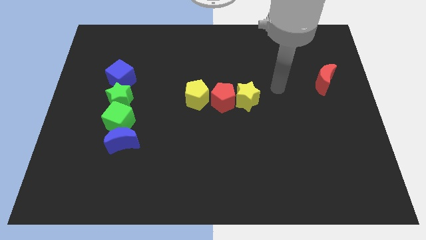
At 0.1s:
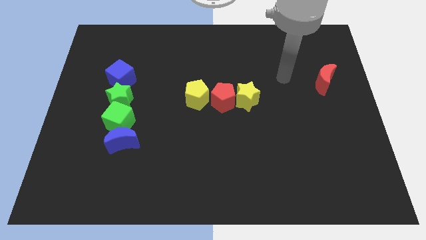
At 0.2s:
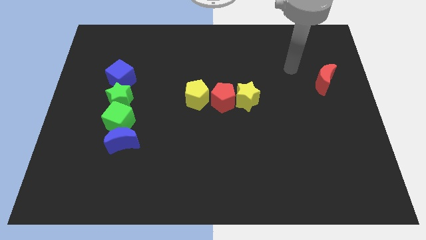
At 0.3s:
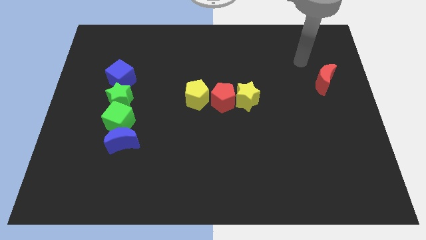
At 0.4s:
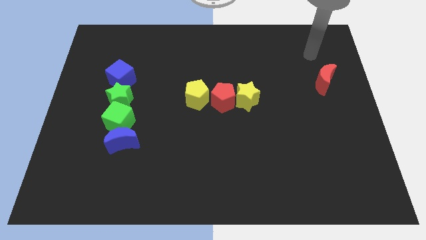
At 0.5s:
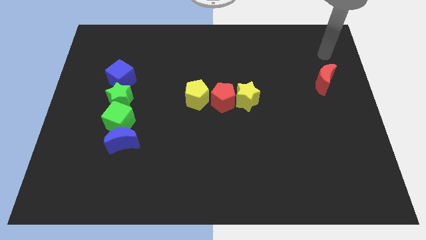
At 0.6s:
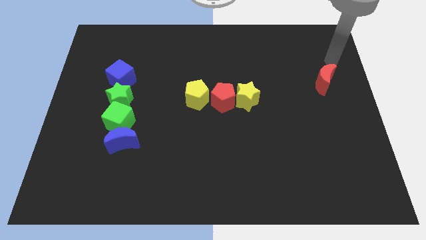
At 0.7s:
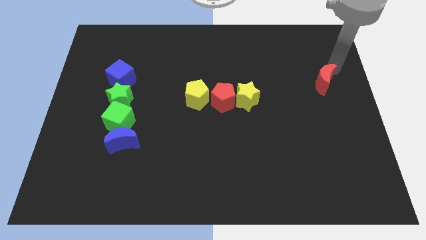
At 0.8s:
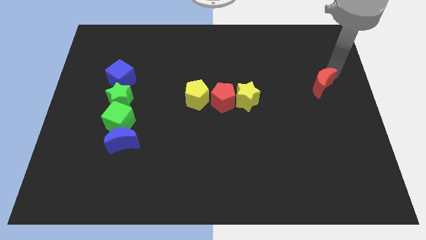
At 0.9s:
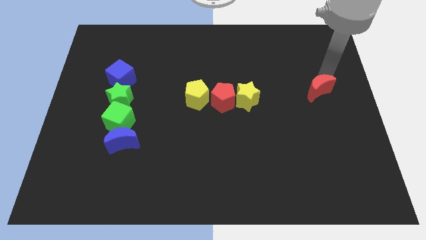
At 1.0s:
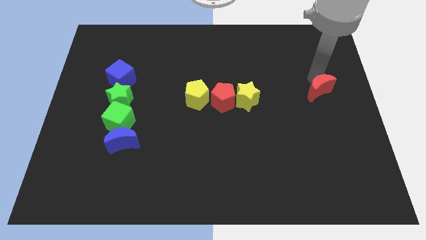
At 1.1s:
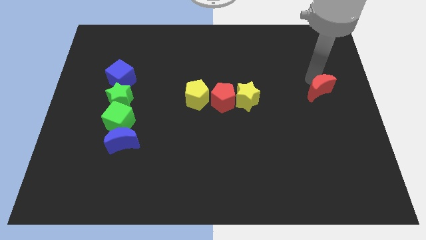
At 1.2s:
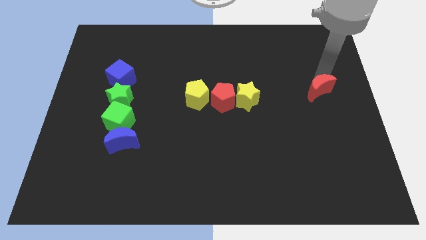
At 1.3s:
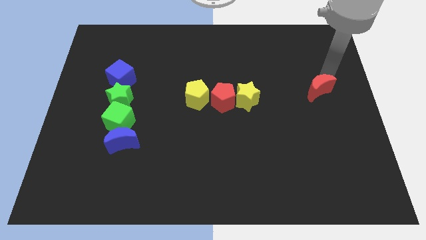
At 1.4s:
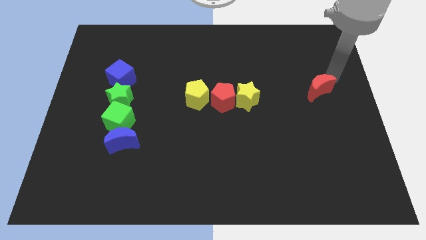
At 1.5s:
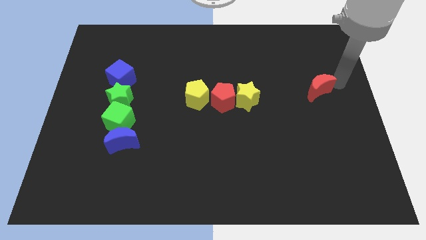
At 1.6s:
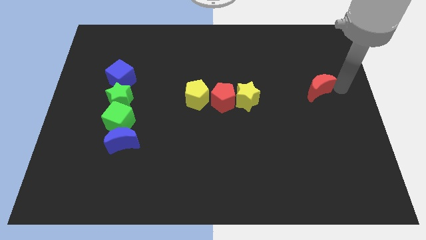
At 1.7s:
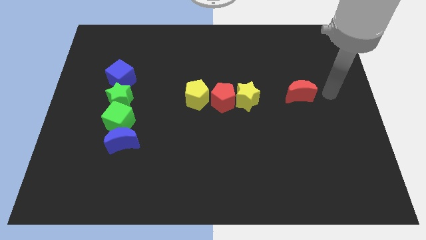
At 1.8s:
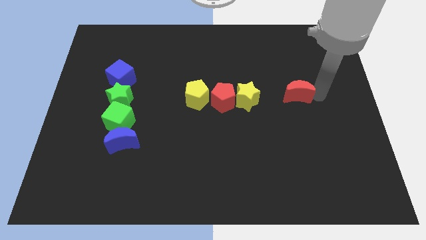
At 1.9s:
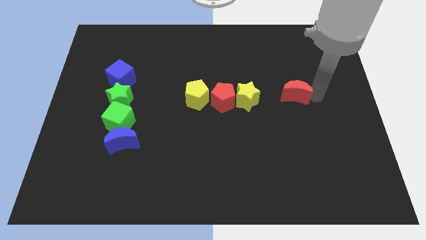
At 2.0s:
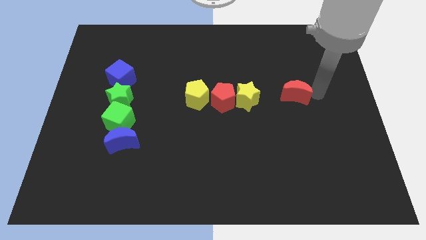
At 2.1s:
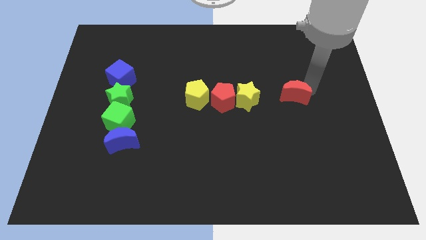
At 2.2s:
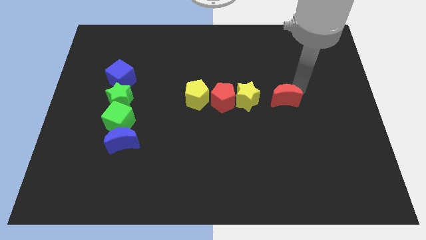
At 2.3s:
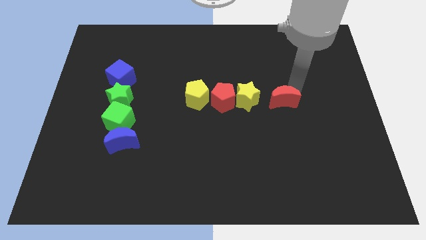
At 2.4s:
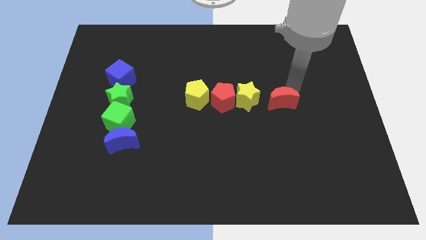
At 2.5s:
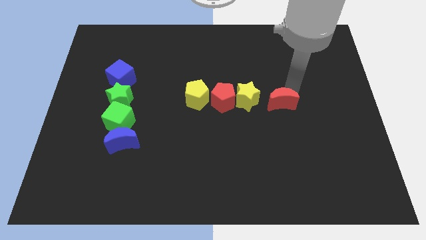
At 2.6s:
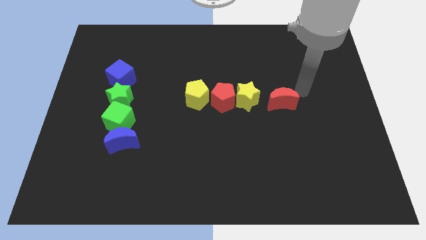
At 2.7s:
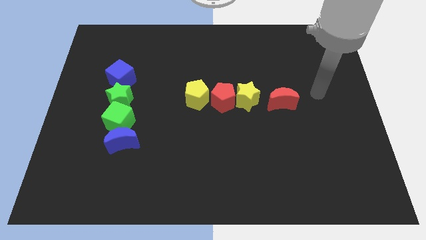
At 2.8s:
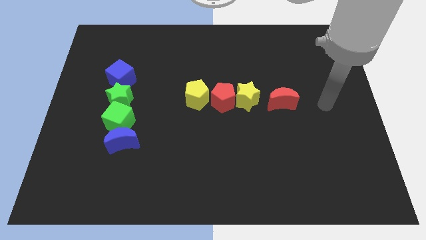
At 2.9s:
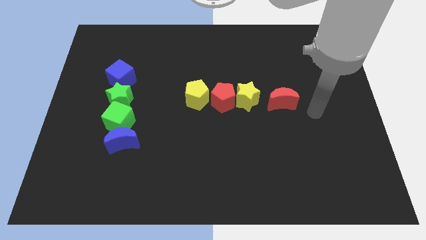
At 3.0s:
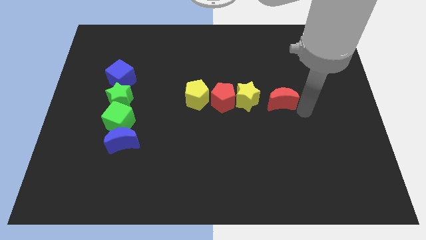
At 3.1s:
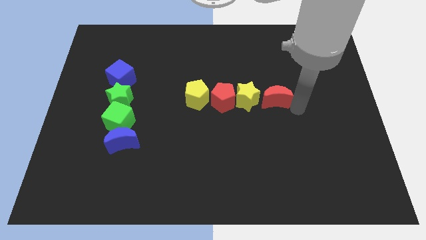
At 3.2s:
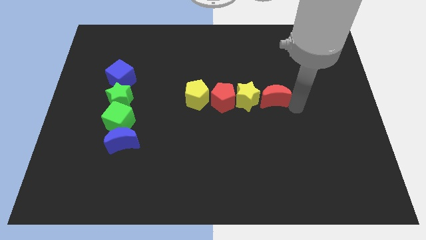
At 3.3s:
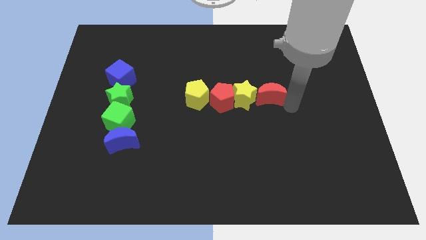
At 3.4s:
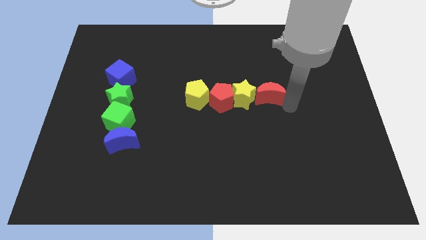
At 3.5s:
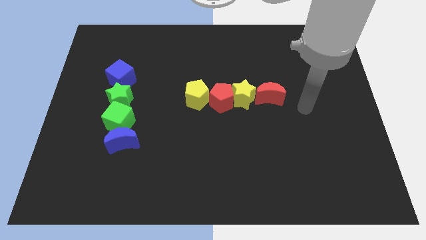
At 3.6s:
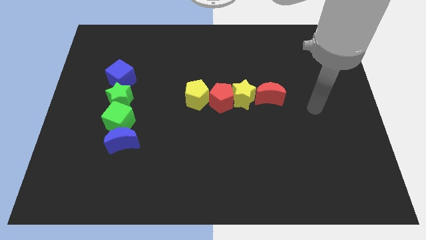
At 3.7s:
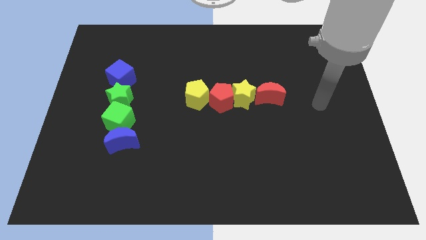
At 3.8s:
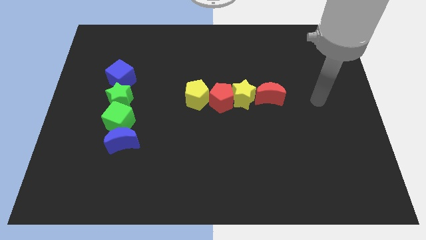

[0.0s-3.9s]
move the red moon to the right of yellow star

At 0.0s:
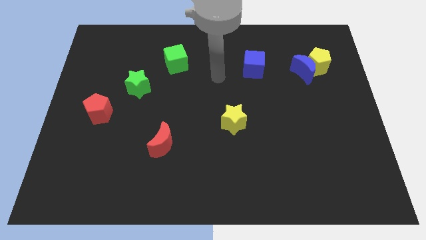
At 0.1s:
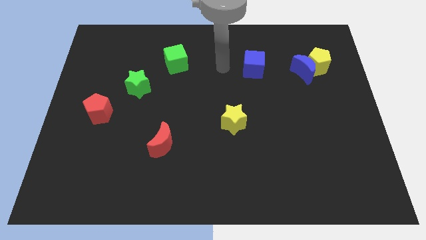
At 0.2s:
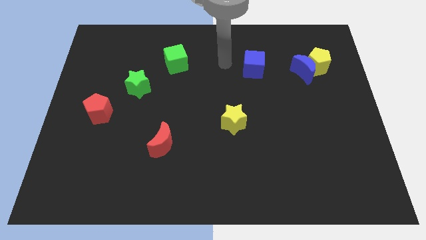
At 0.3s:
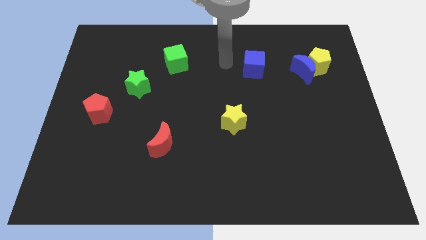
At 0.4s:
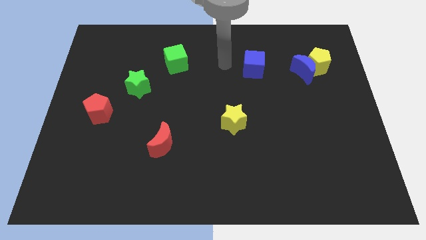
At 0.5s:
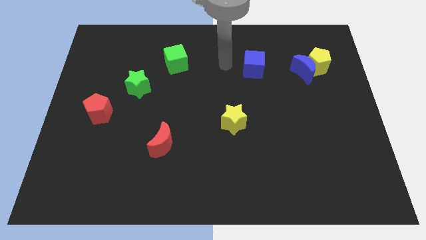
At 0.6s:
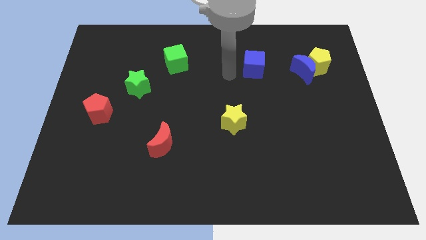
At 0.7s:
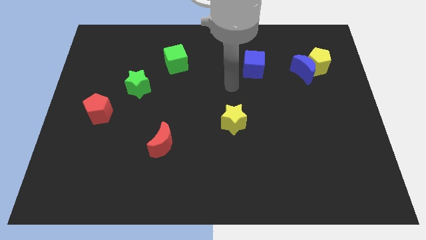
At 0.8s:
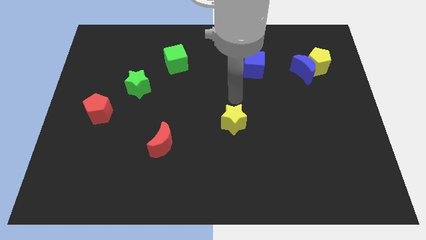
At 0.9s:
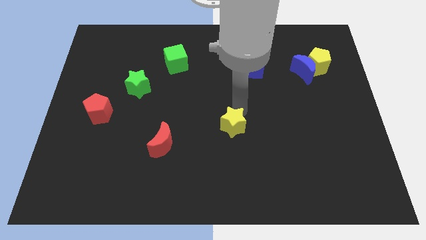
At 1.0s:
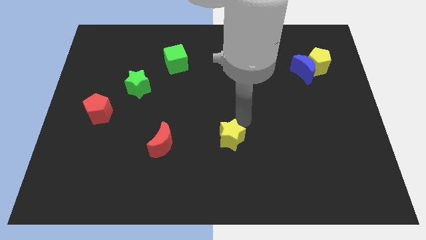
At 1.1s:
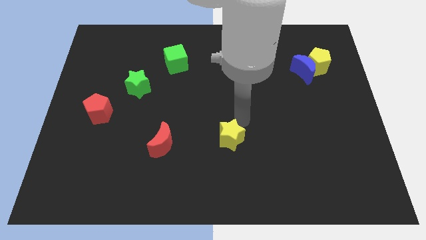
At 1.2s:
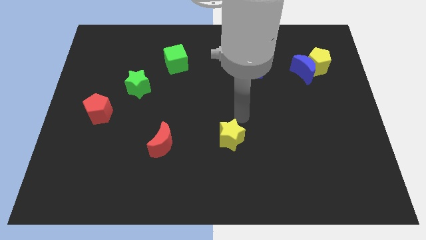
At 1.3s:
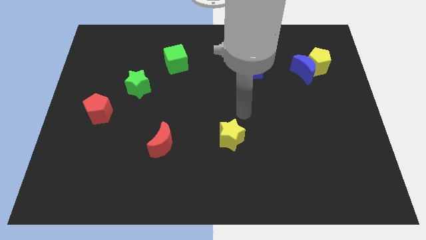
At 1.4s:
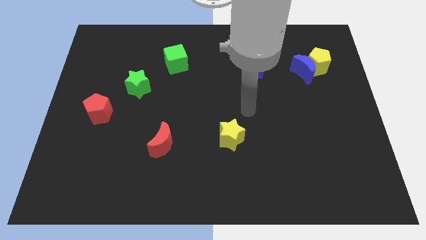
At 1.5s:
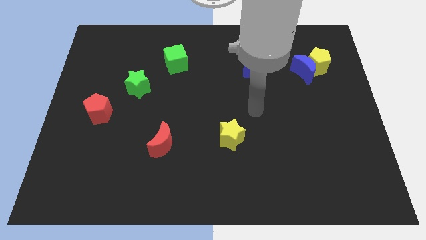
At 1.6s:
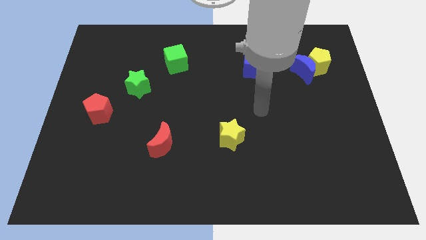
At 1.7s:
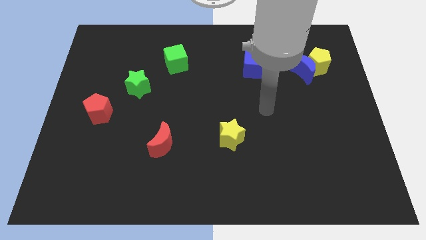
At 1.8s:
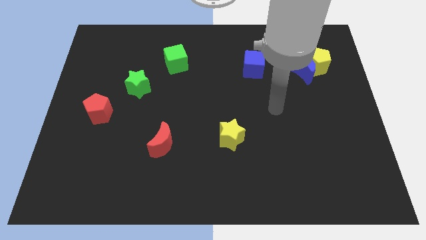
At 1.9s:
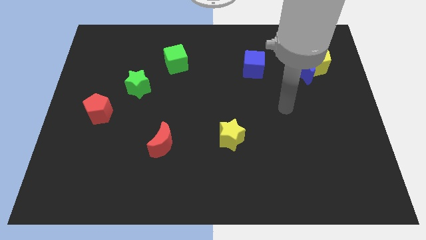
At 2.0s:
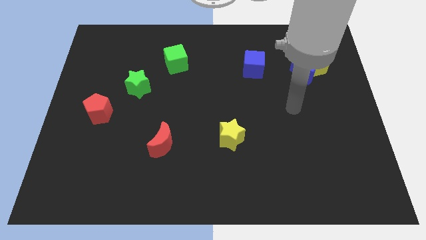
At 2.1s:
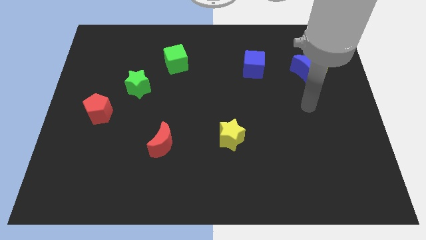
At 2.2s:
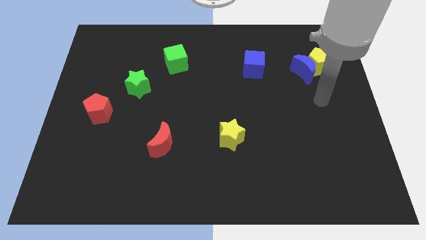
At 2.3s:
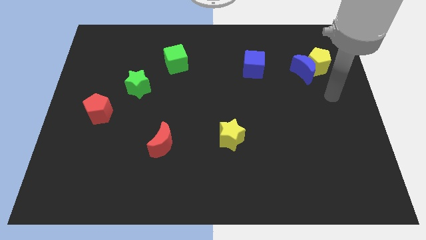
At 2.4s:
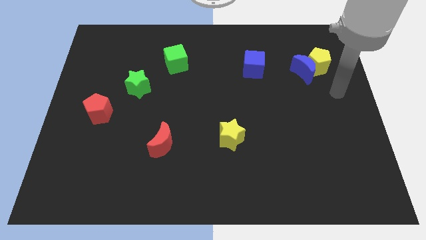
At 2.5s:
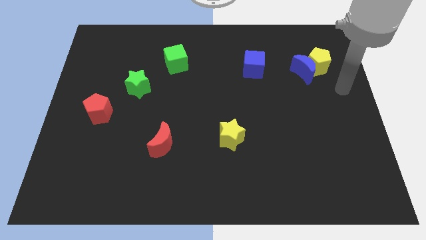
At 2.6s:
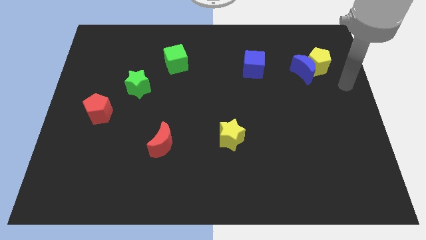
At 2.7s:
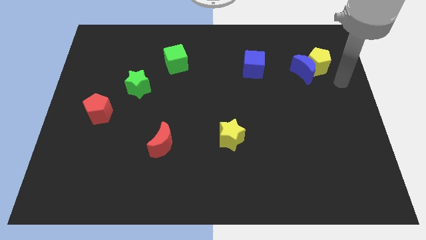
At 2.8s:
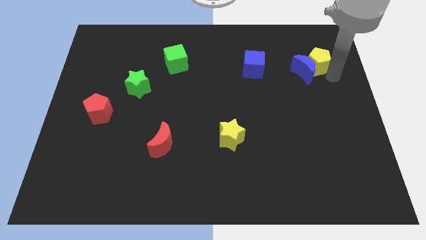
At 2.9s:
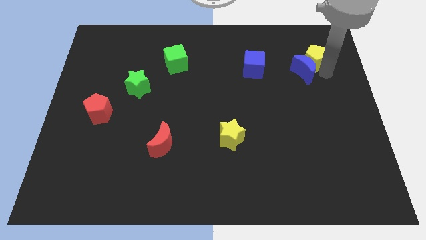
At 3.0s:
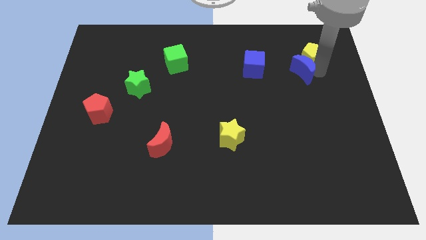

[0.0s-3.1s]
push the yellow star towards the bottom side of the board

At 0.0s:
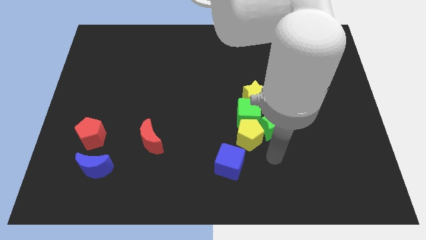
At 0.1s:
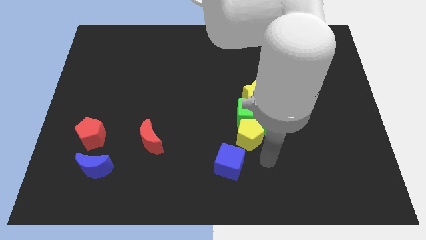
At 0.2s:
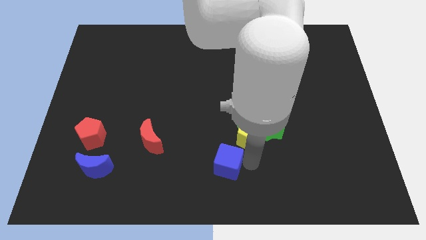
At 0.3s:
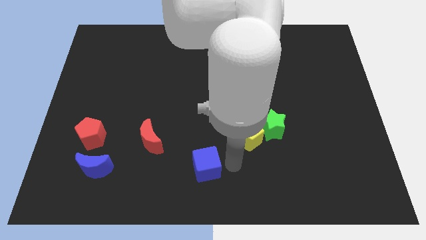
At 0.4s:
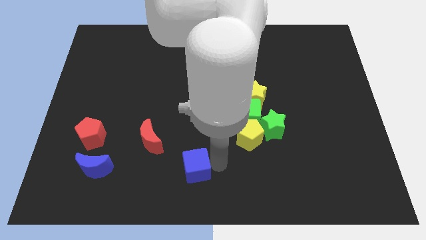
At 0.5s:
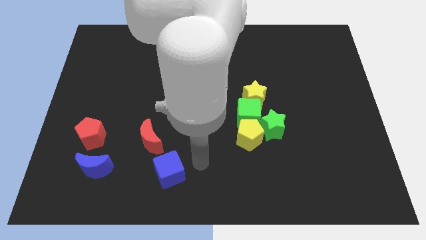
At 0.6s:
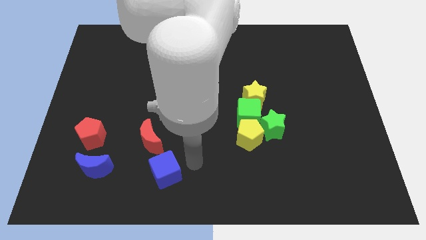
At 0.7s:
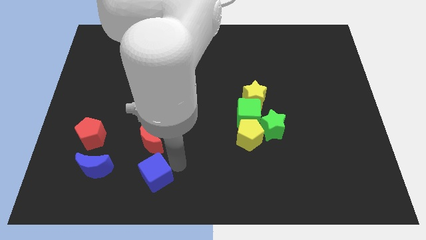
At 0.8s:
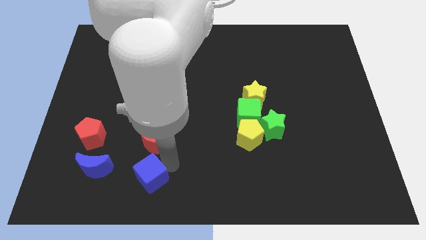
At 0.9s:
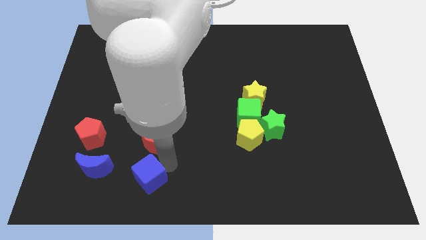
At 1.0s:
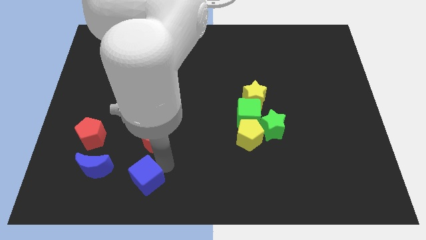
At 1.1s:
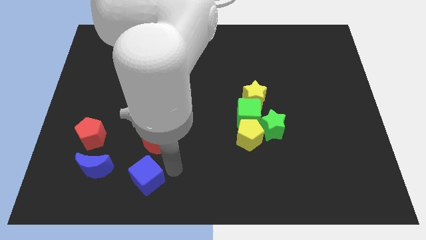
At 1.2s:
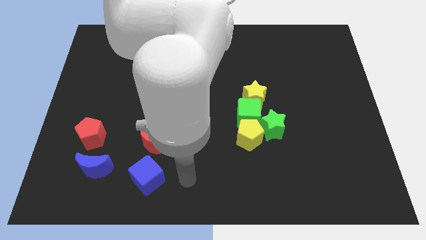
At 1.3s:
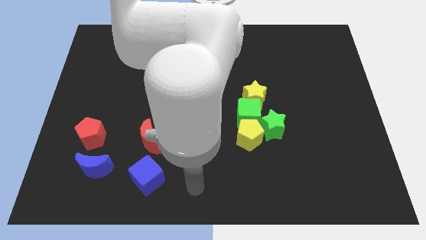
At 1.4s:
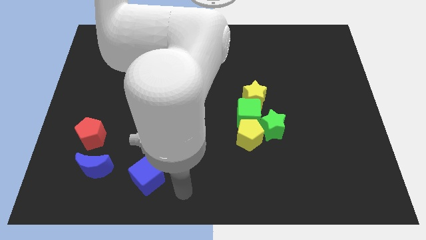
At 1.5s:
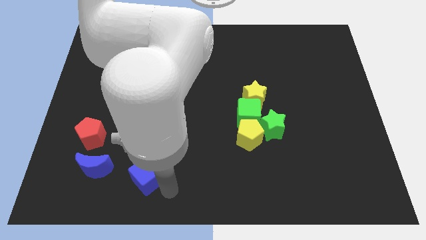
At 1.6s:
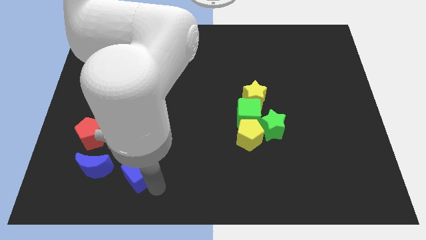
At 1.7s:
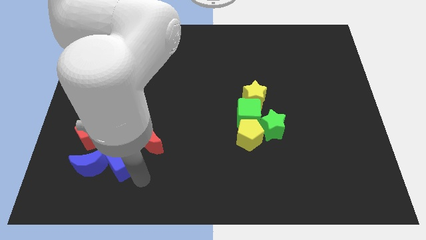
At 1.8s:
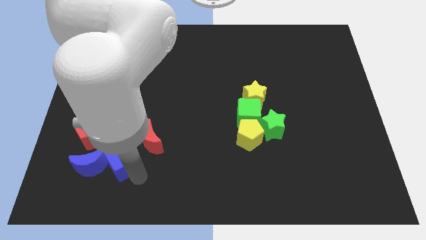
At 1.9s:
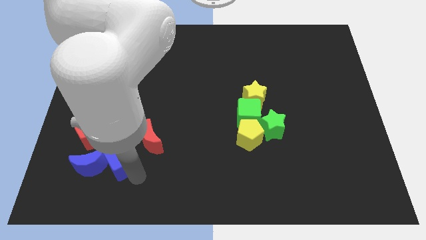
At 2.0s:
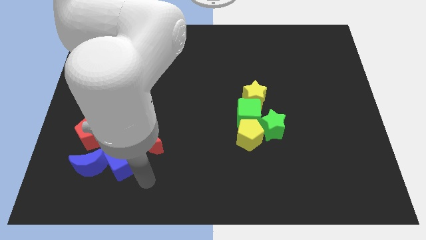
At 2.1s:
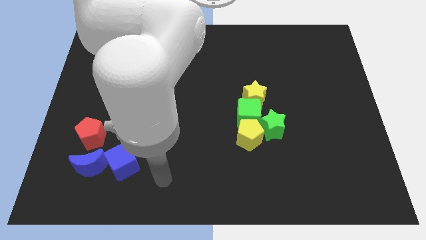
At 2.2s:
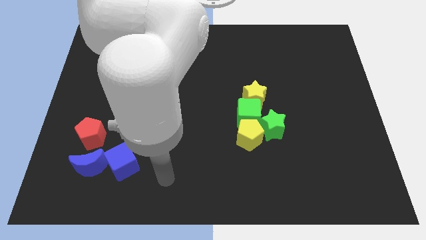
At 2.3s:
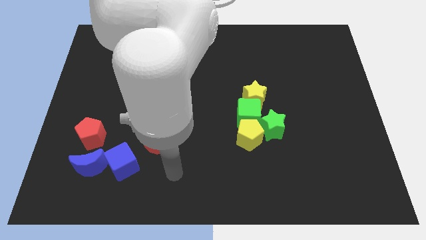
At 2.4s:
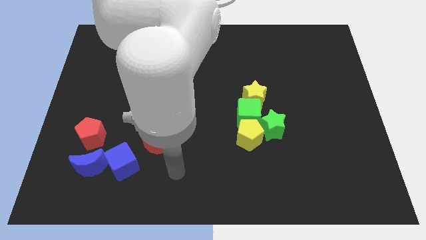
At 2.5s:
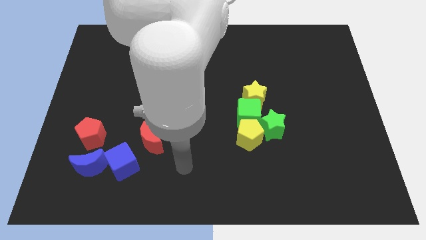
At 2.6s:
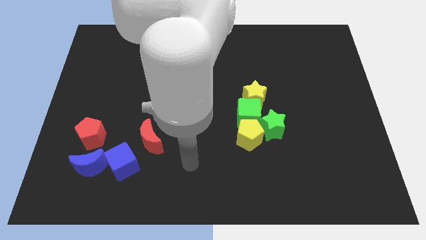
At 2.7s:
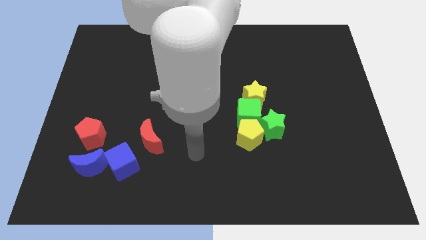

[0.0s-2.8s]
attach the blue moon and the blue cube
